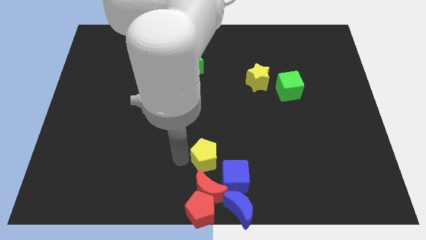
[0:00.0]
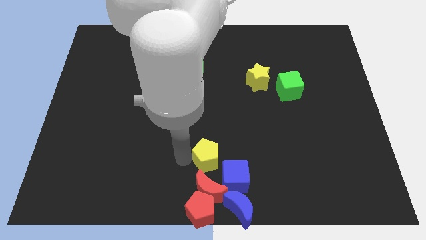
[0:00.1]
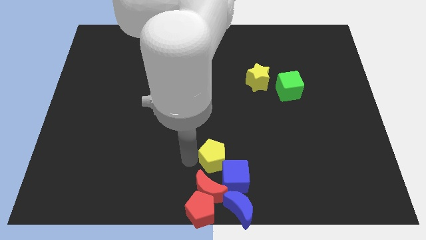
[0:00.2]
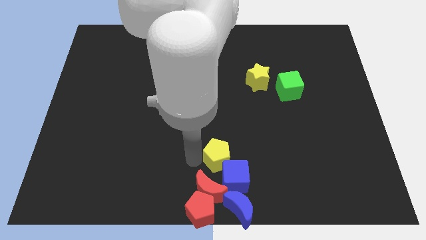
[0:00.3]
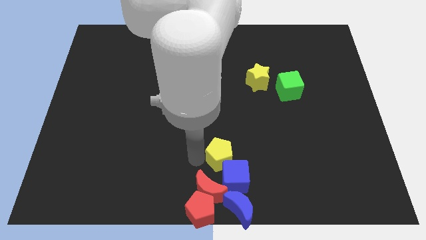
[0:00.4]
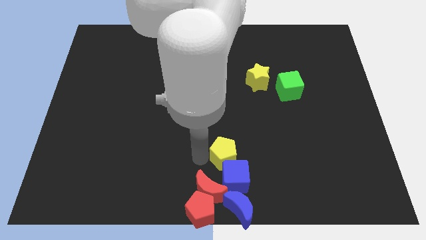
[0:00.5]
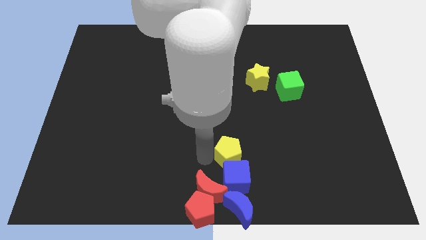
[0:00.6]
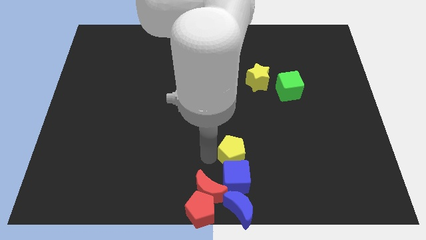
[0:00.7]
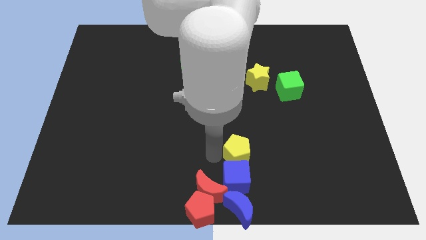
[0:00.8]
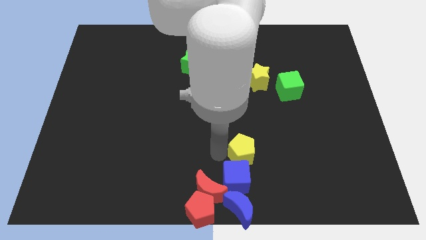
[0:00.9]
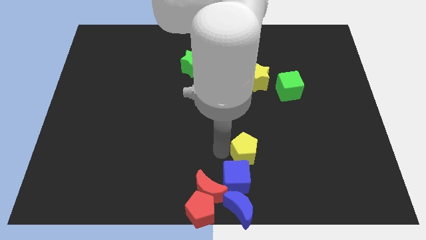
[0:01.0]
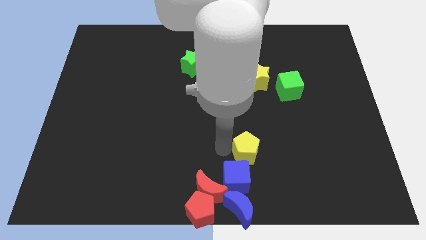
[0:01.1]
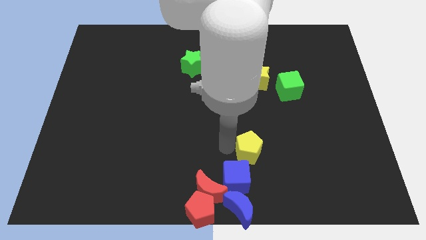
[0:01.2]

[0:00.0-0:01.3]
place yellow pentagon above blue cube

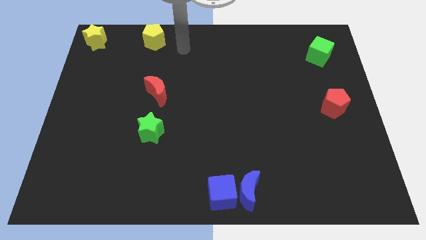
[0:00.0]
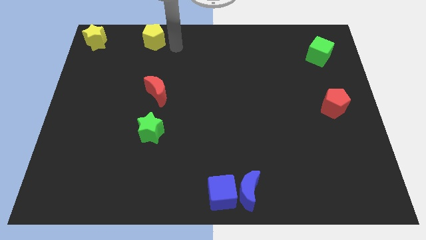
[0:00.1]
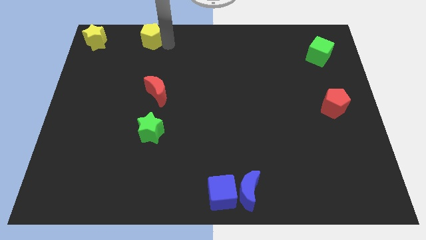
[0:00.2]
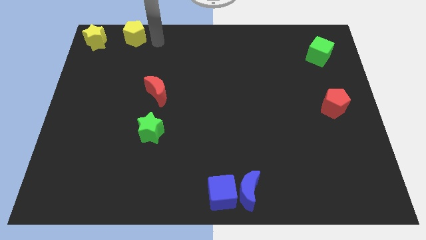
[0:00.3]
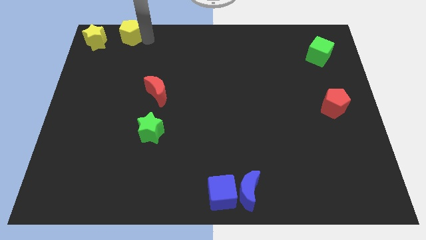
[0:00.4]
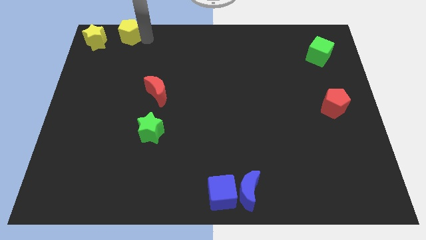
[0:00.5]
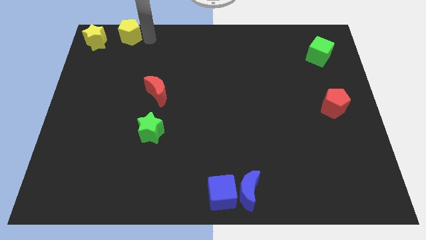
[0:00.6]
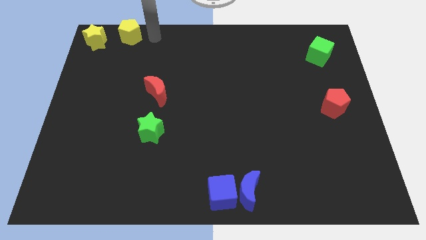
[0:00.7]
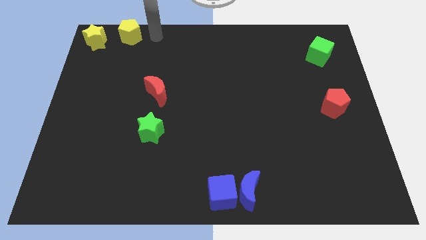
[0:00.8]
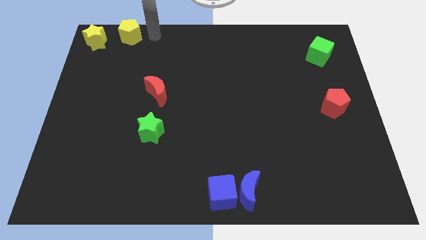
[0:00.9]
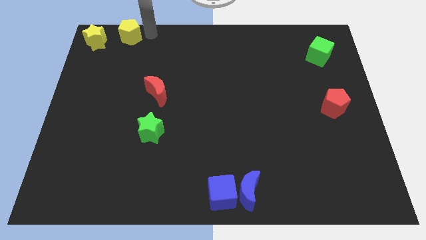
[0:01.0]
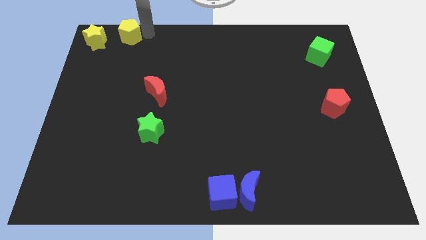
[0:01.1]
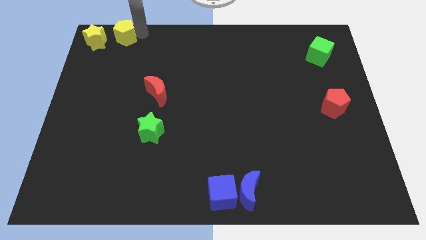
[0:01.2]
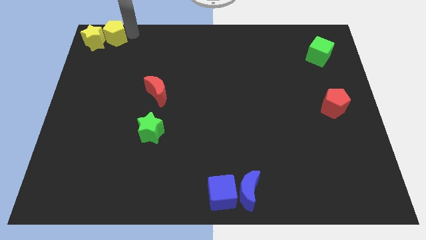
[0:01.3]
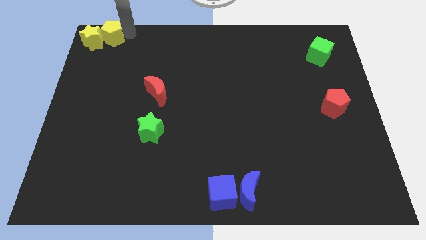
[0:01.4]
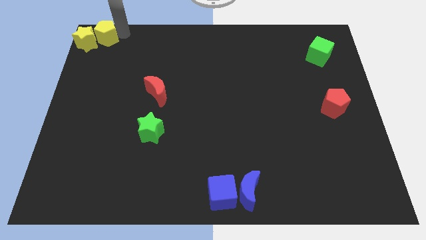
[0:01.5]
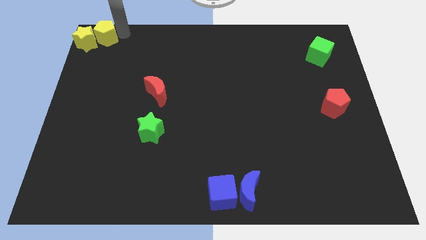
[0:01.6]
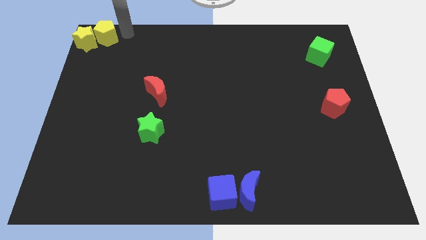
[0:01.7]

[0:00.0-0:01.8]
push the yellow pentagon into the yellow star

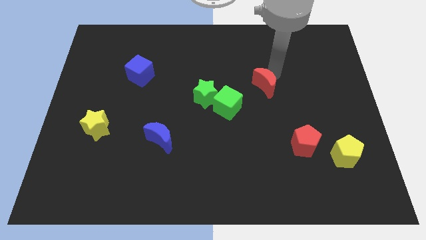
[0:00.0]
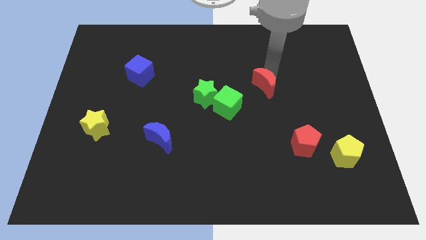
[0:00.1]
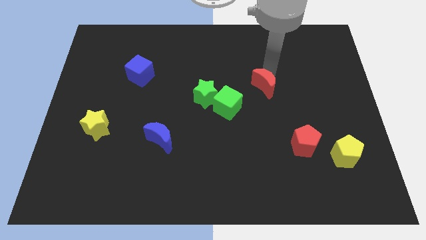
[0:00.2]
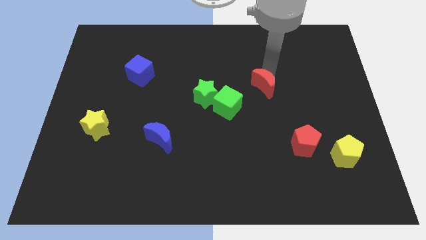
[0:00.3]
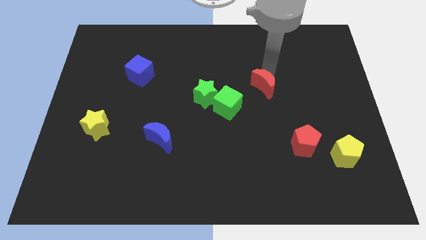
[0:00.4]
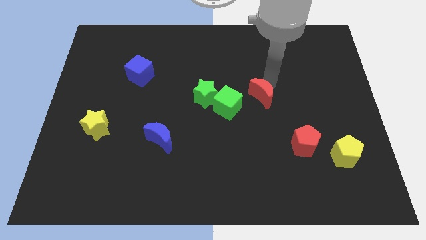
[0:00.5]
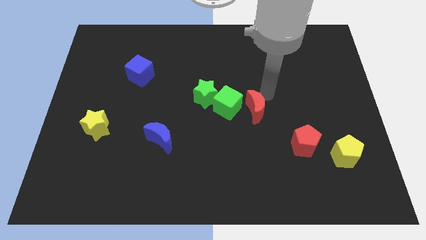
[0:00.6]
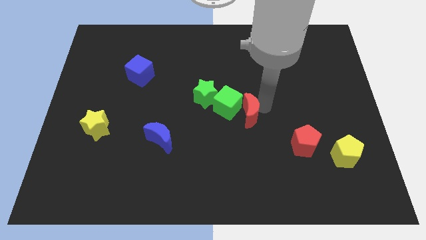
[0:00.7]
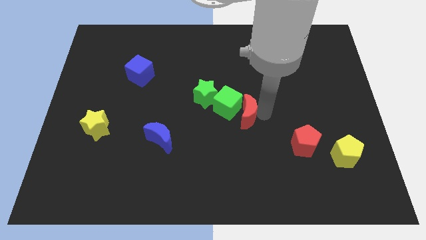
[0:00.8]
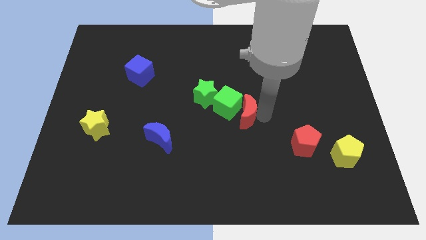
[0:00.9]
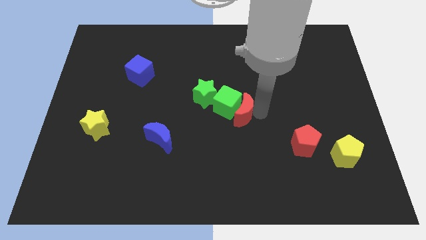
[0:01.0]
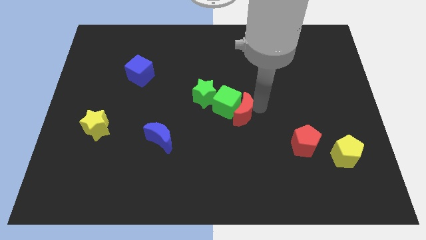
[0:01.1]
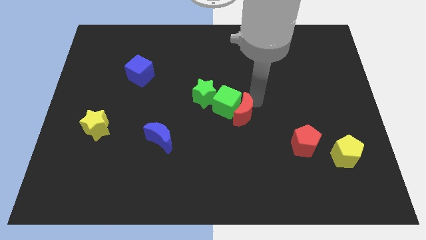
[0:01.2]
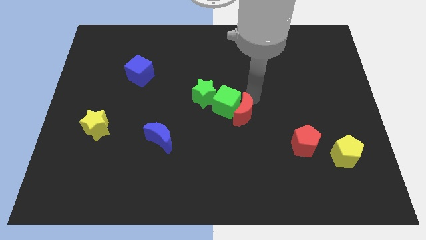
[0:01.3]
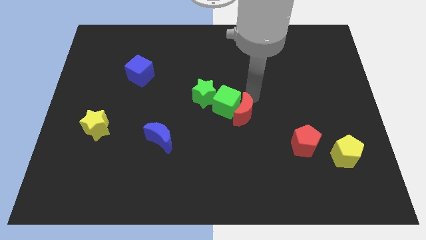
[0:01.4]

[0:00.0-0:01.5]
push the red crescent towards the center of the board

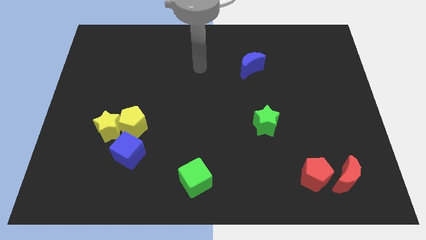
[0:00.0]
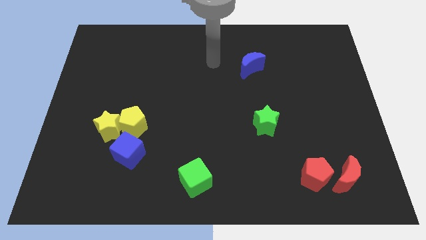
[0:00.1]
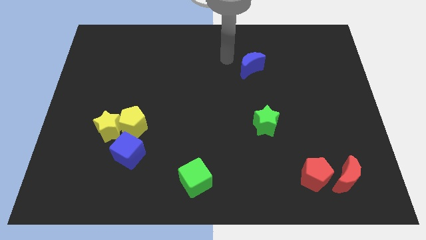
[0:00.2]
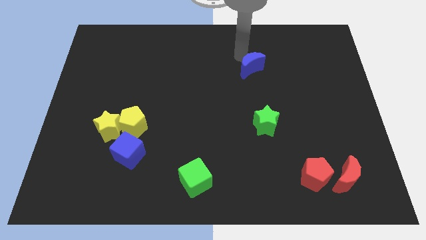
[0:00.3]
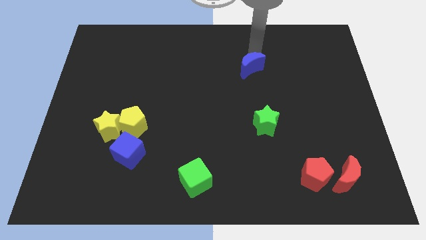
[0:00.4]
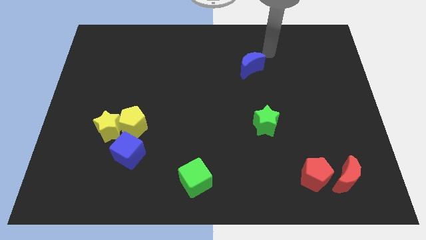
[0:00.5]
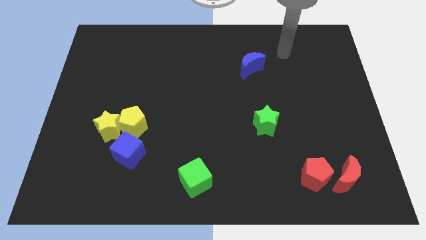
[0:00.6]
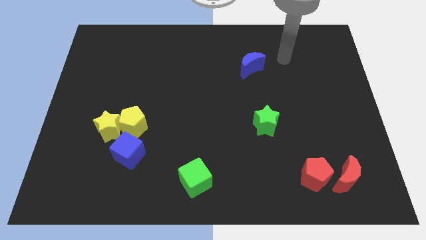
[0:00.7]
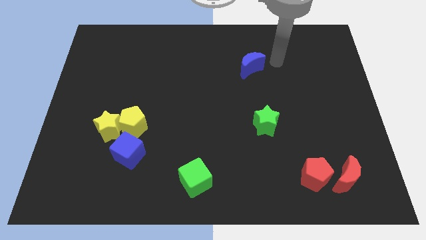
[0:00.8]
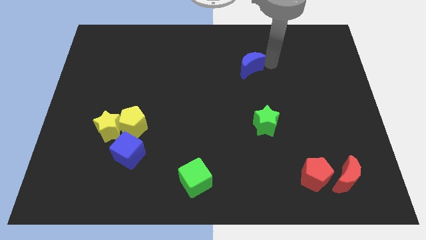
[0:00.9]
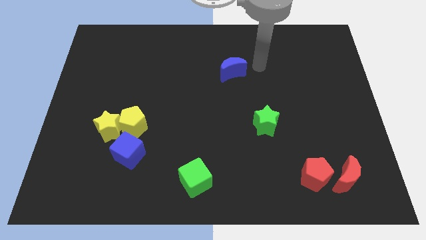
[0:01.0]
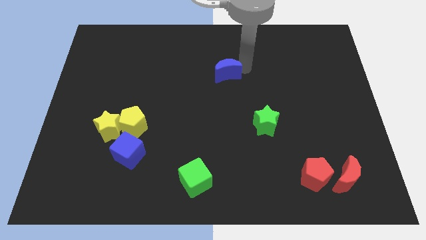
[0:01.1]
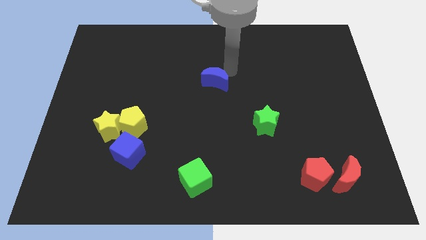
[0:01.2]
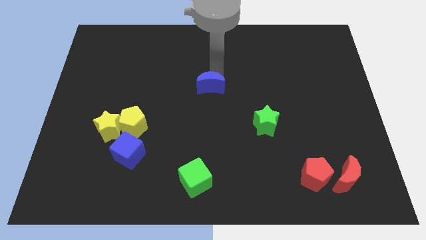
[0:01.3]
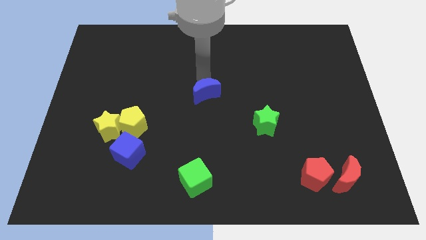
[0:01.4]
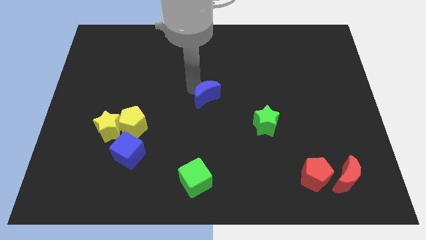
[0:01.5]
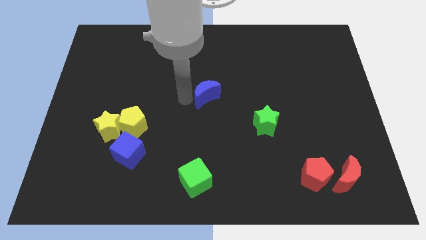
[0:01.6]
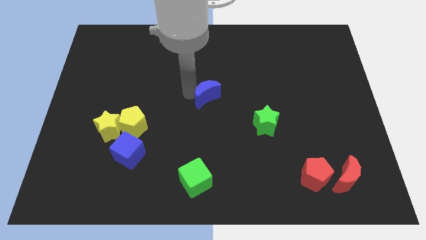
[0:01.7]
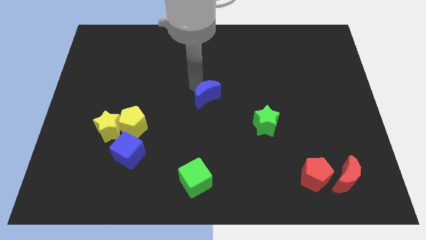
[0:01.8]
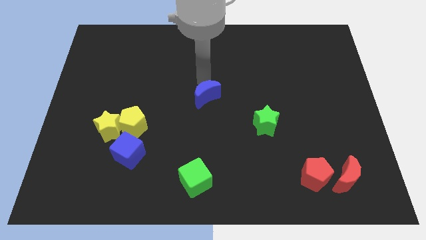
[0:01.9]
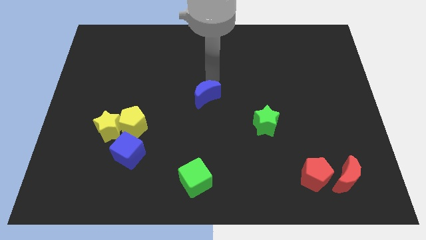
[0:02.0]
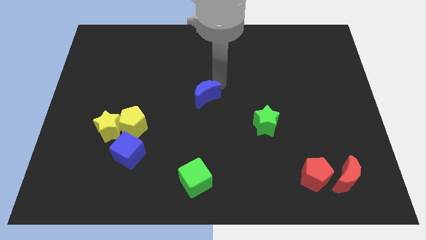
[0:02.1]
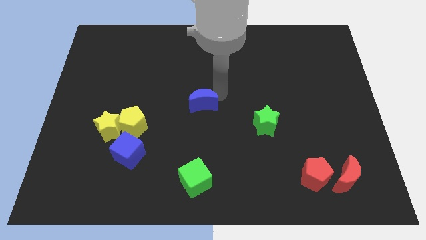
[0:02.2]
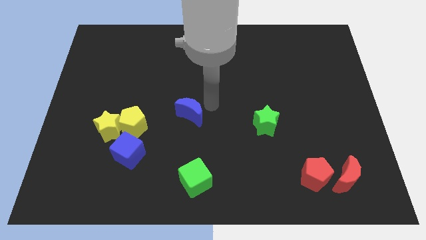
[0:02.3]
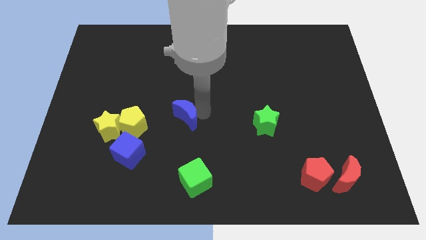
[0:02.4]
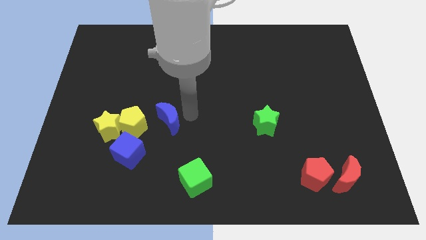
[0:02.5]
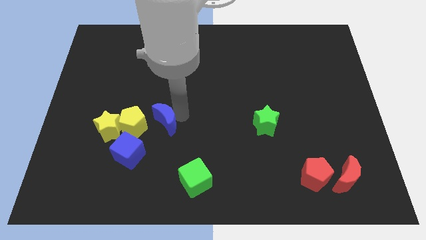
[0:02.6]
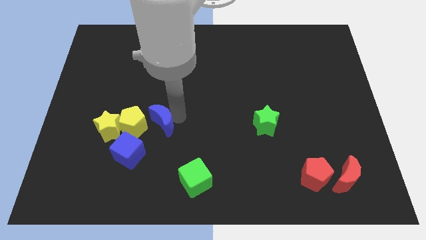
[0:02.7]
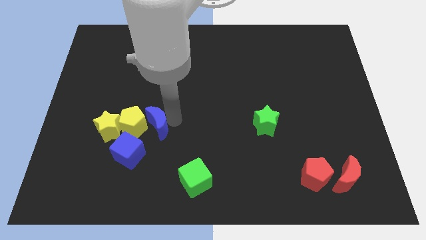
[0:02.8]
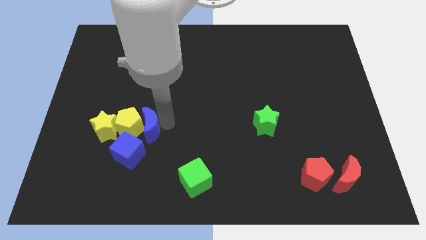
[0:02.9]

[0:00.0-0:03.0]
put the blue moon into the yellow pentagon

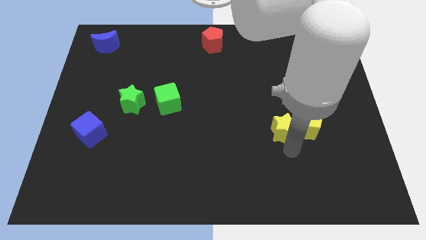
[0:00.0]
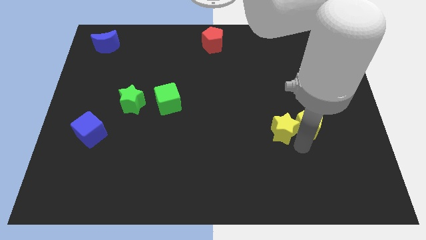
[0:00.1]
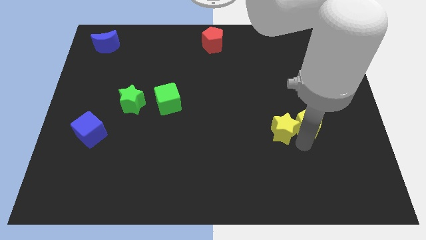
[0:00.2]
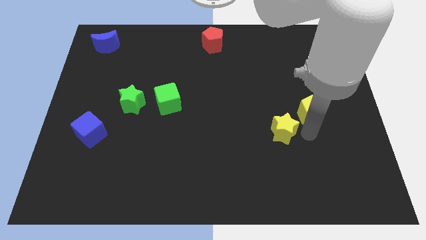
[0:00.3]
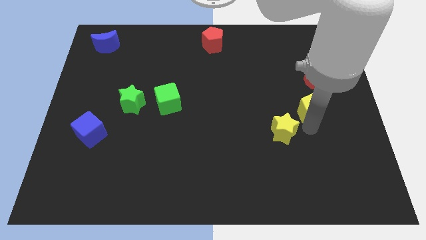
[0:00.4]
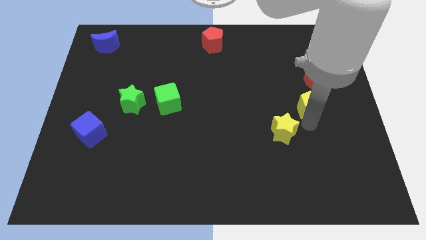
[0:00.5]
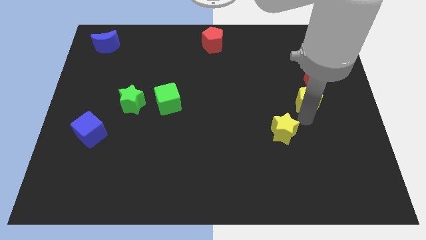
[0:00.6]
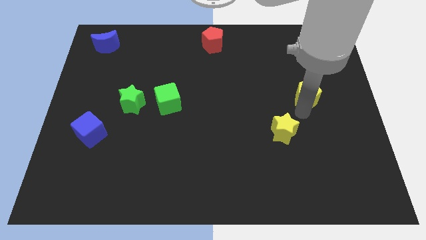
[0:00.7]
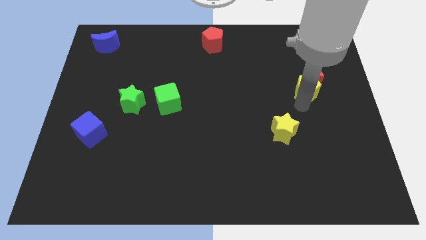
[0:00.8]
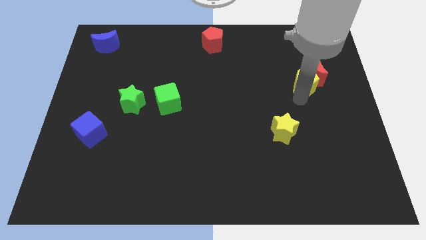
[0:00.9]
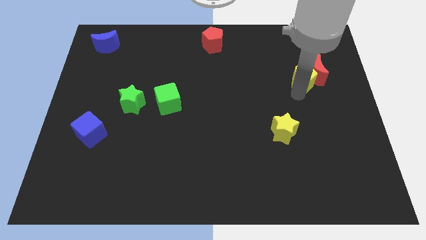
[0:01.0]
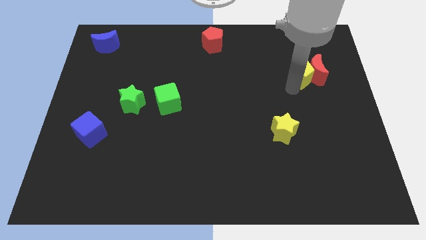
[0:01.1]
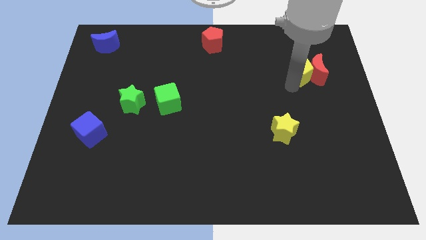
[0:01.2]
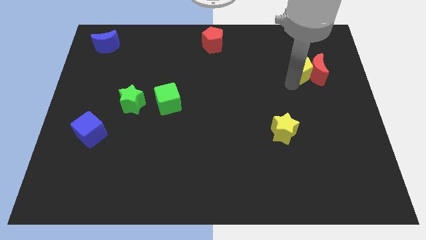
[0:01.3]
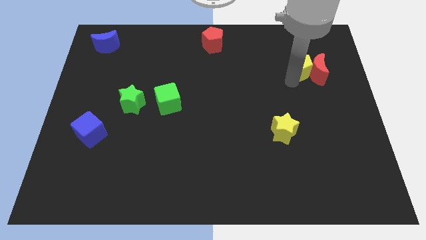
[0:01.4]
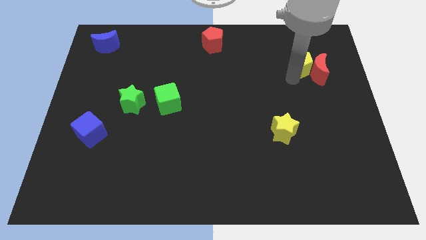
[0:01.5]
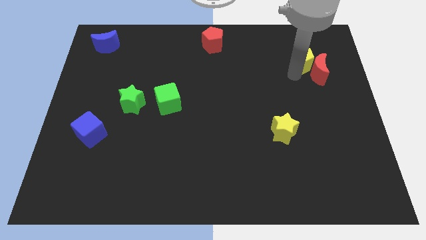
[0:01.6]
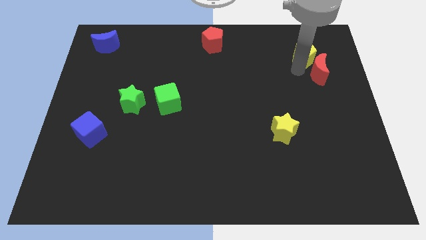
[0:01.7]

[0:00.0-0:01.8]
push the yellow pentagon to the left of the red crescent
